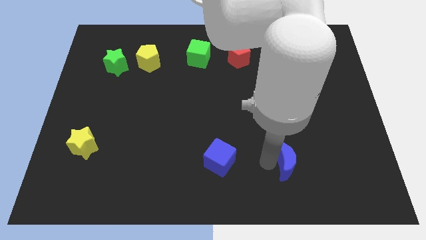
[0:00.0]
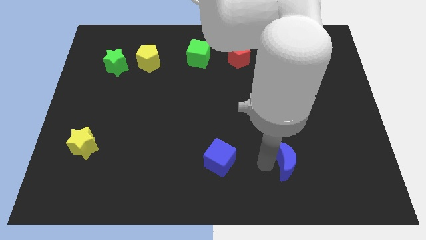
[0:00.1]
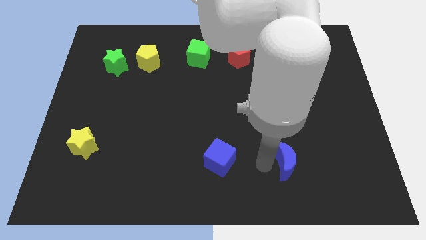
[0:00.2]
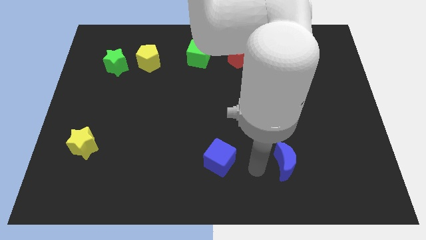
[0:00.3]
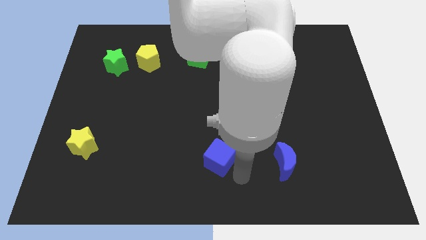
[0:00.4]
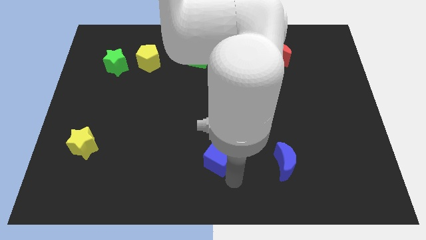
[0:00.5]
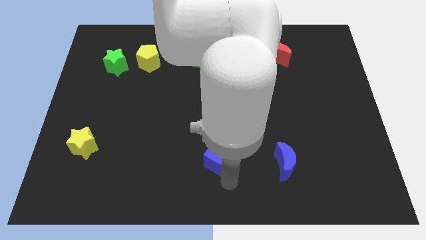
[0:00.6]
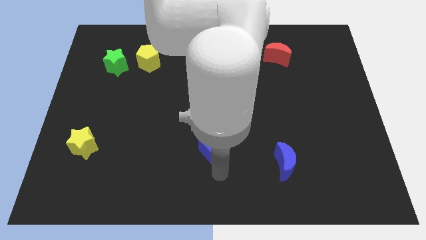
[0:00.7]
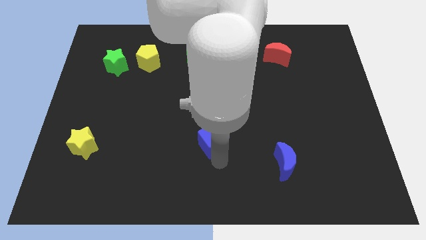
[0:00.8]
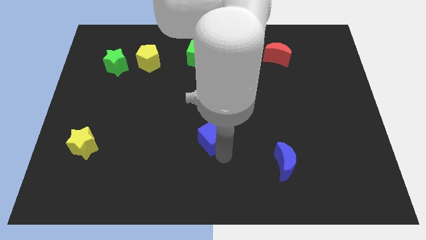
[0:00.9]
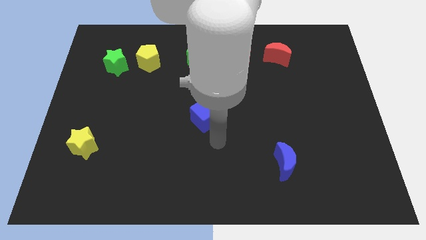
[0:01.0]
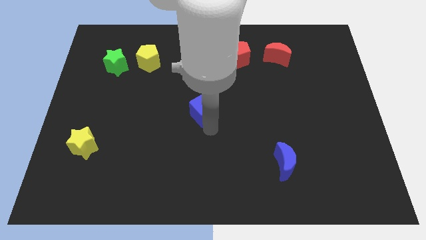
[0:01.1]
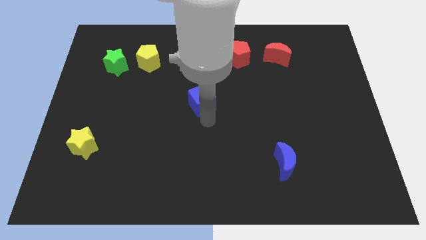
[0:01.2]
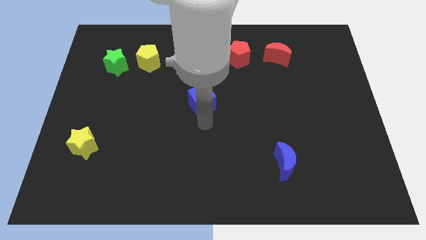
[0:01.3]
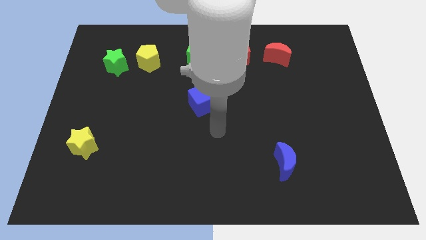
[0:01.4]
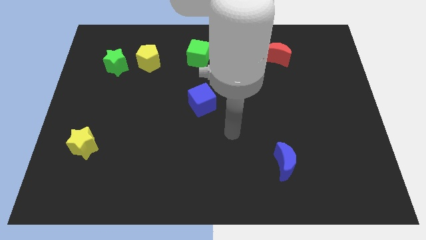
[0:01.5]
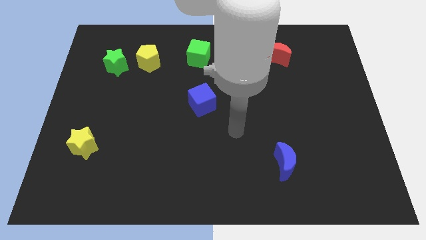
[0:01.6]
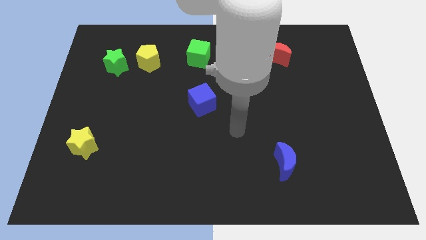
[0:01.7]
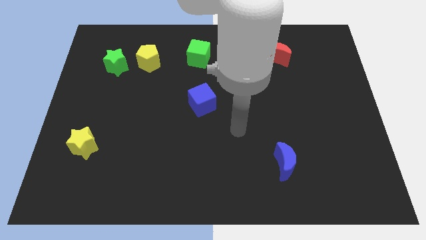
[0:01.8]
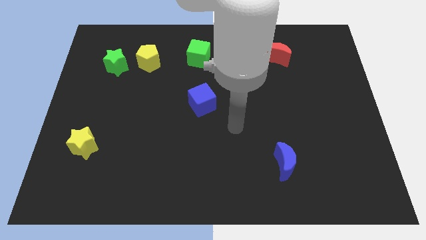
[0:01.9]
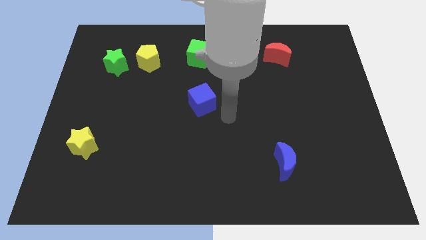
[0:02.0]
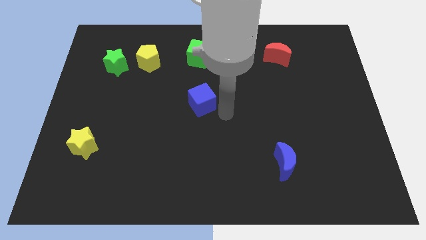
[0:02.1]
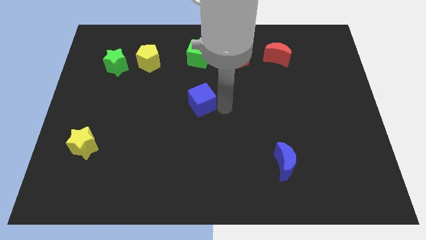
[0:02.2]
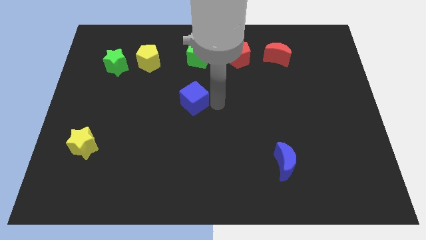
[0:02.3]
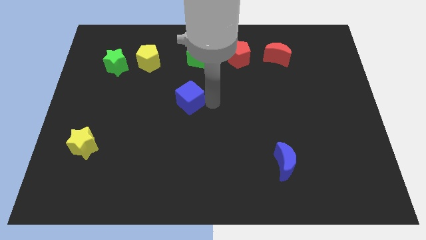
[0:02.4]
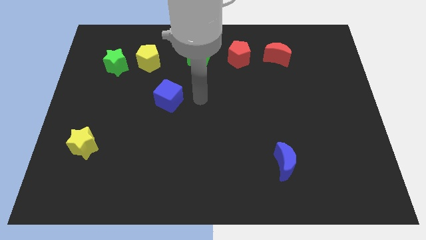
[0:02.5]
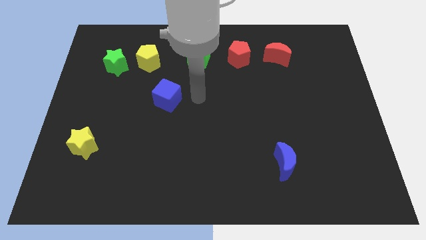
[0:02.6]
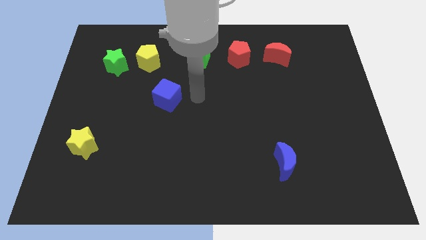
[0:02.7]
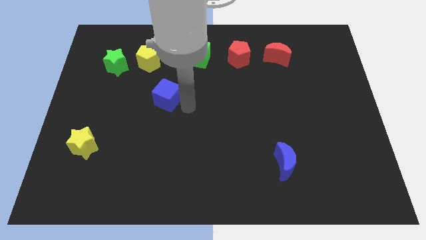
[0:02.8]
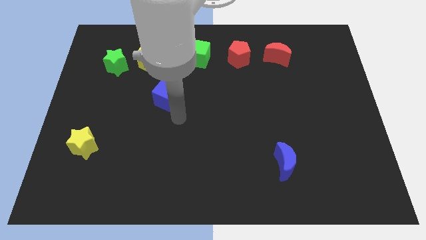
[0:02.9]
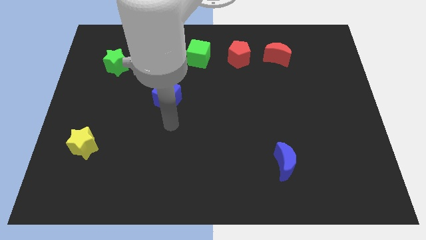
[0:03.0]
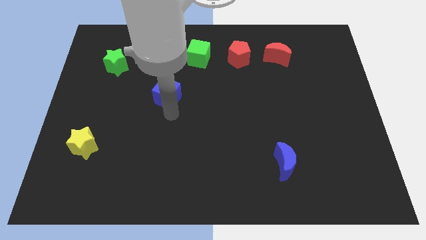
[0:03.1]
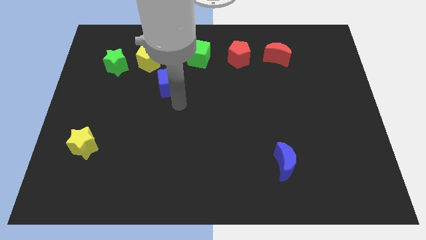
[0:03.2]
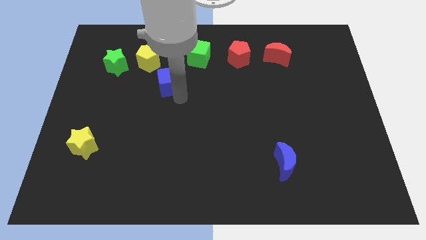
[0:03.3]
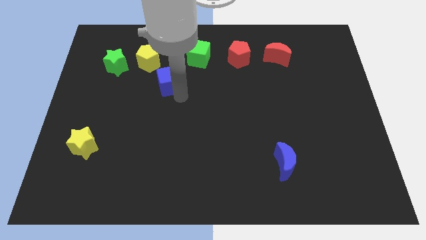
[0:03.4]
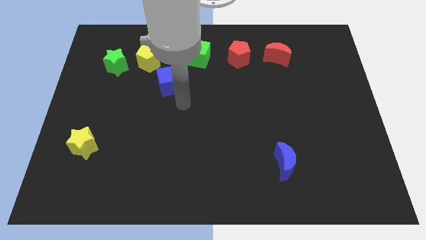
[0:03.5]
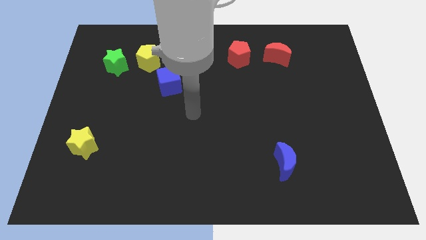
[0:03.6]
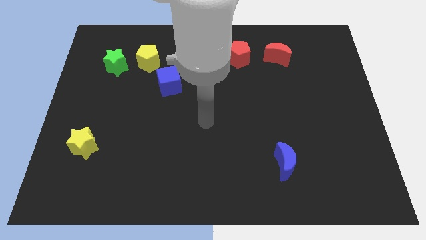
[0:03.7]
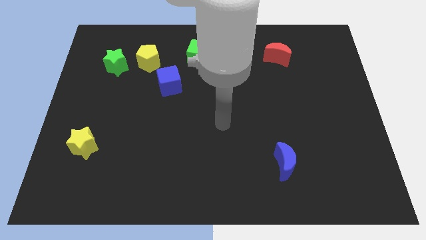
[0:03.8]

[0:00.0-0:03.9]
push the blue moon to the bottom right side of the yellow pentagon

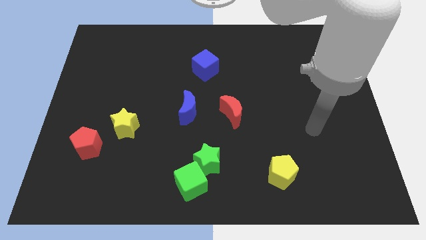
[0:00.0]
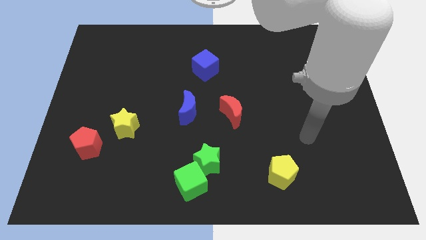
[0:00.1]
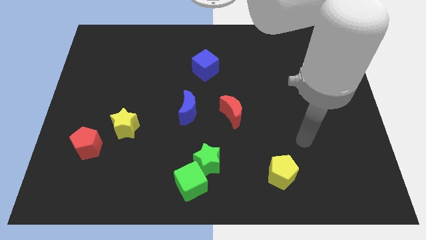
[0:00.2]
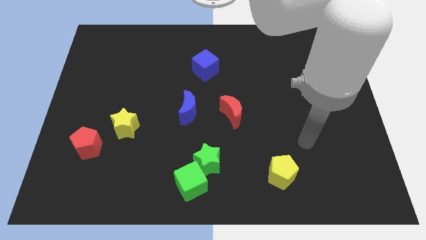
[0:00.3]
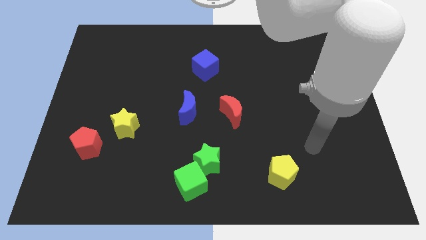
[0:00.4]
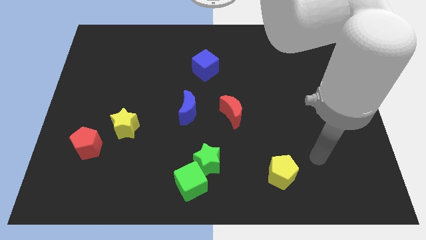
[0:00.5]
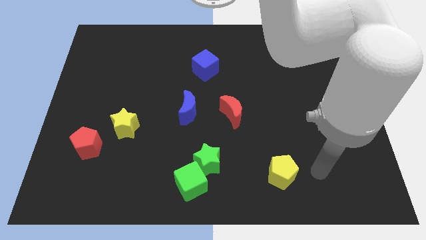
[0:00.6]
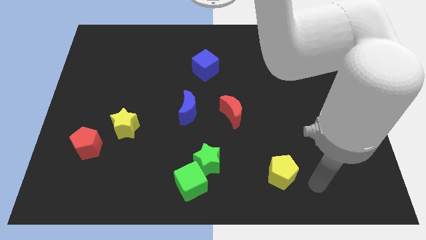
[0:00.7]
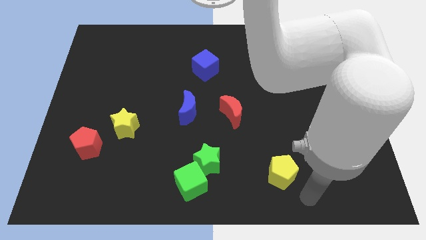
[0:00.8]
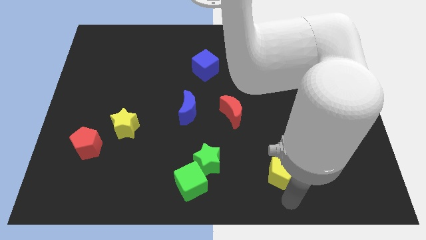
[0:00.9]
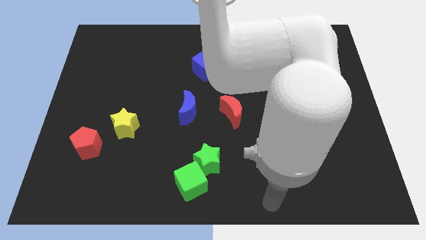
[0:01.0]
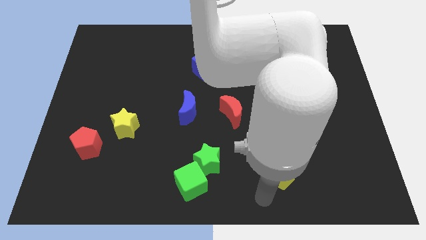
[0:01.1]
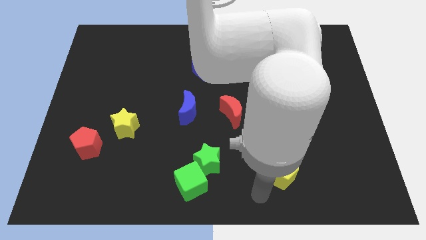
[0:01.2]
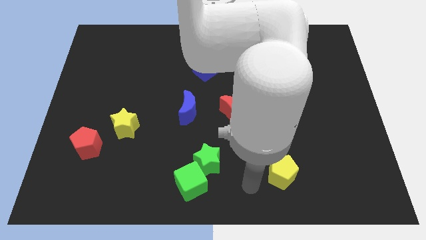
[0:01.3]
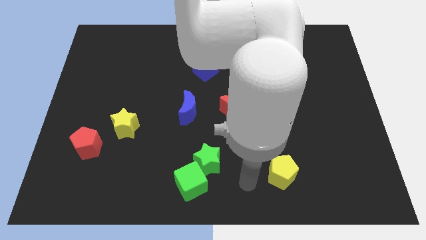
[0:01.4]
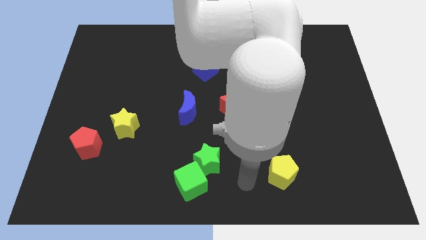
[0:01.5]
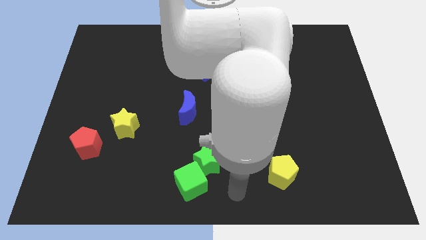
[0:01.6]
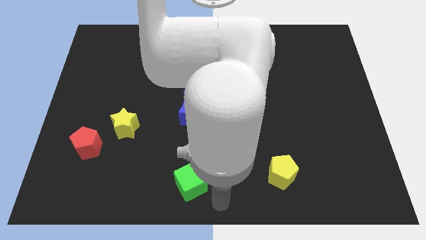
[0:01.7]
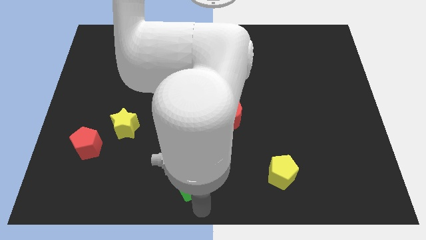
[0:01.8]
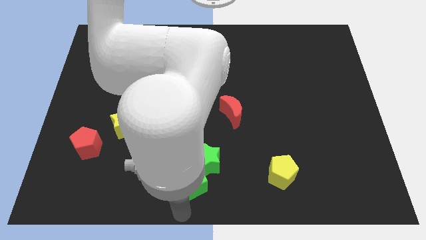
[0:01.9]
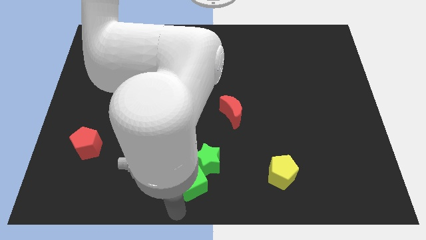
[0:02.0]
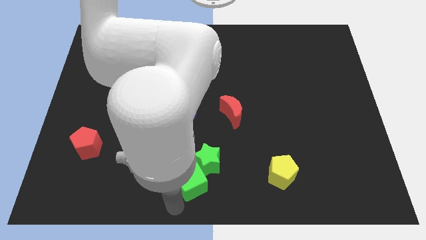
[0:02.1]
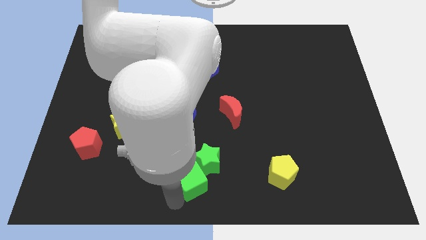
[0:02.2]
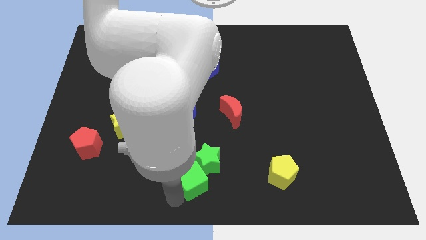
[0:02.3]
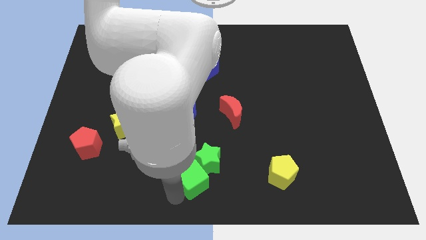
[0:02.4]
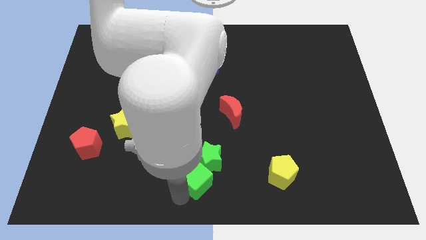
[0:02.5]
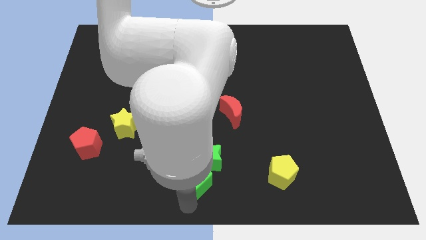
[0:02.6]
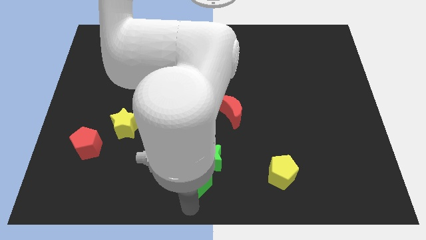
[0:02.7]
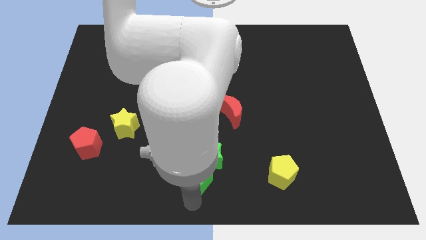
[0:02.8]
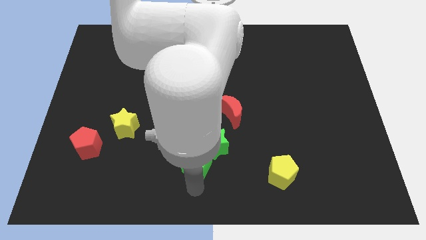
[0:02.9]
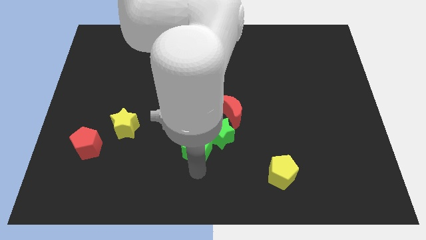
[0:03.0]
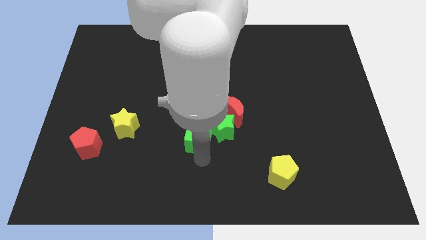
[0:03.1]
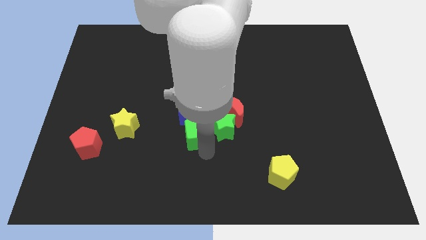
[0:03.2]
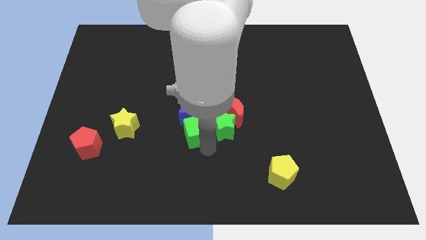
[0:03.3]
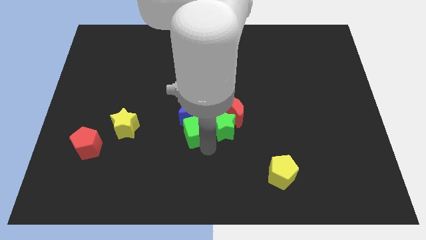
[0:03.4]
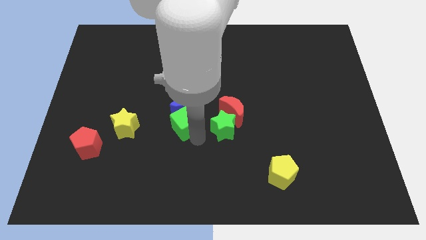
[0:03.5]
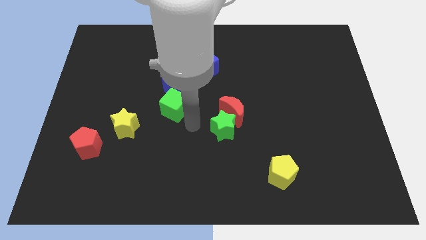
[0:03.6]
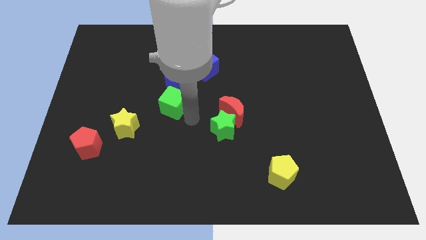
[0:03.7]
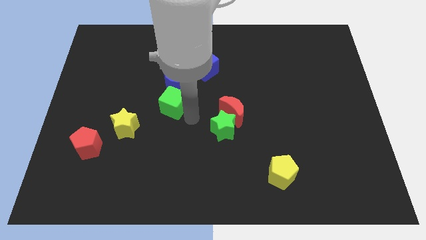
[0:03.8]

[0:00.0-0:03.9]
move the green cube slightly towards the top

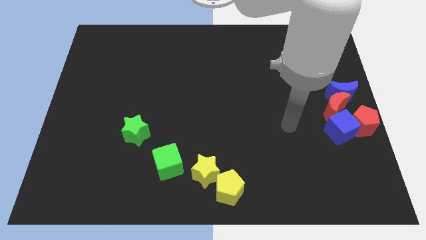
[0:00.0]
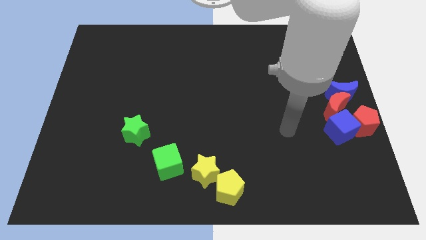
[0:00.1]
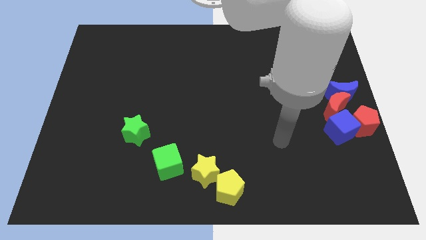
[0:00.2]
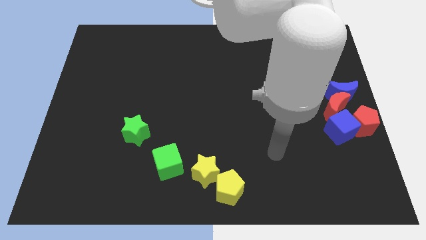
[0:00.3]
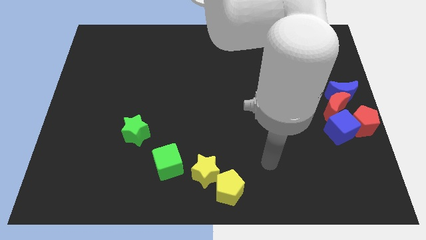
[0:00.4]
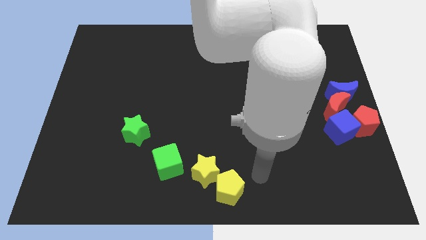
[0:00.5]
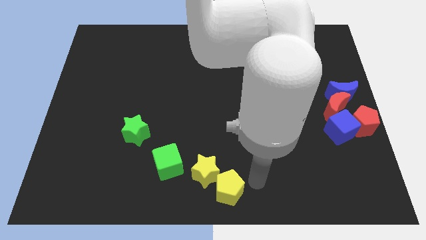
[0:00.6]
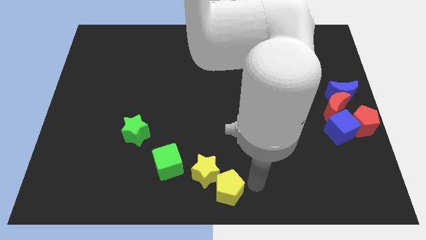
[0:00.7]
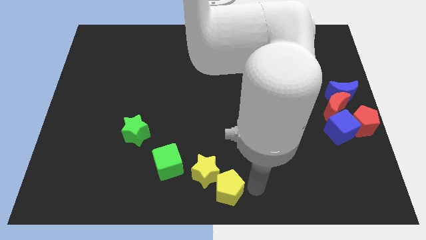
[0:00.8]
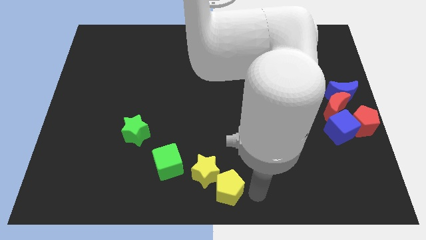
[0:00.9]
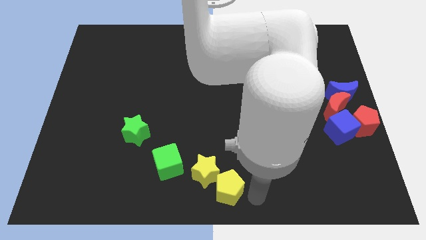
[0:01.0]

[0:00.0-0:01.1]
point your arm at the right of the yellow pentagon

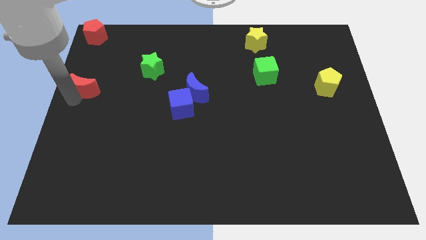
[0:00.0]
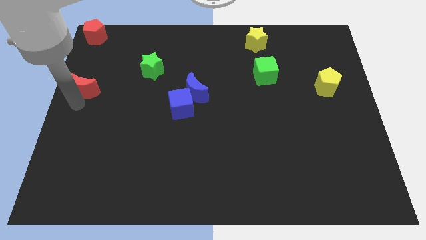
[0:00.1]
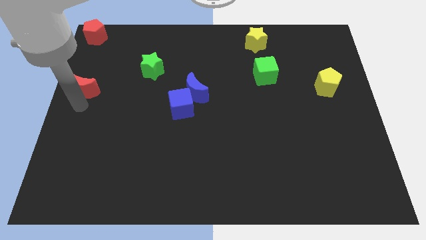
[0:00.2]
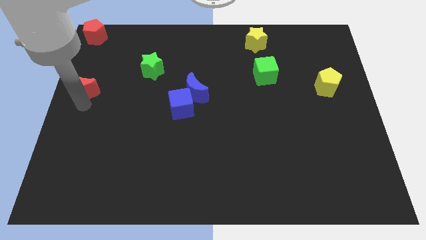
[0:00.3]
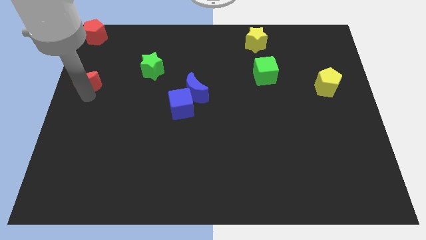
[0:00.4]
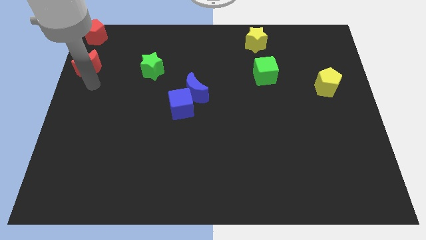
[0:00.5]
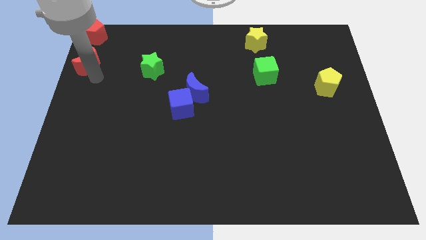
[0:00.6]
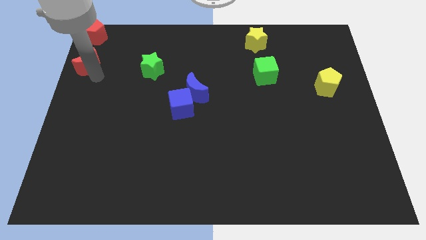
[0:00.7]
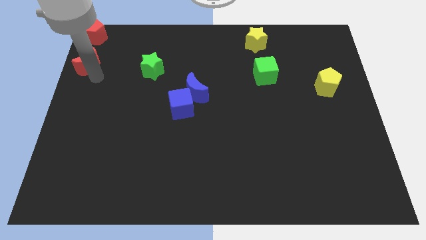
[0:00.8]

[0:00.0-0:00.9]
move red moon below the red pentagon
